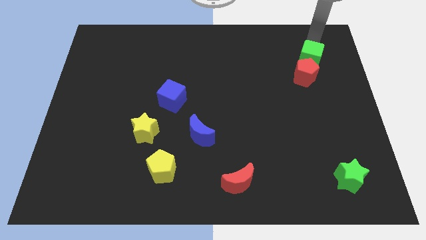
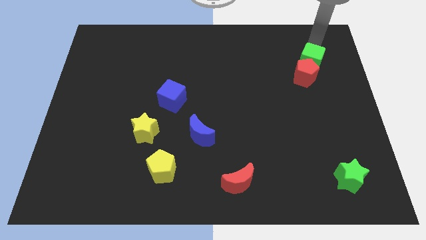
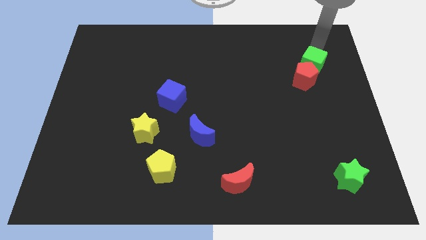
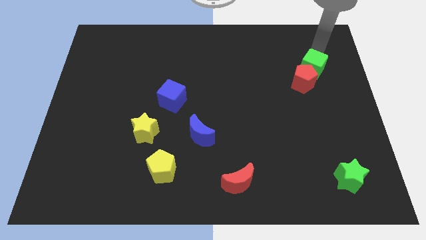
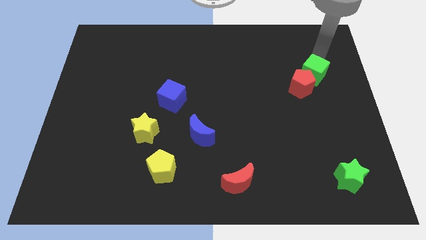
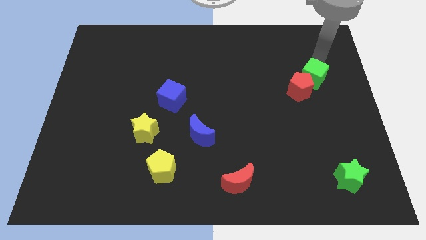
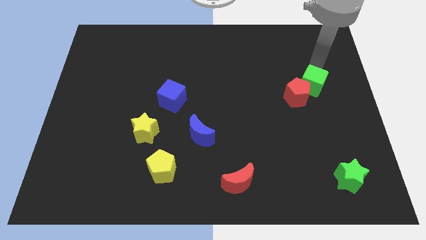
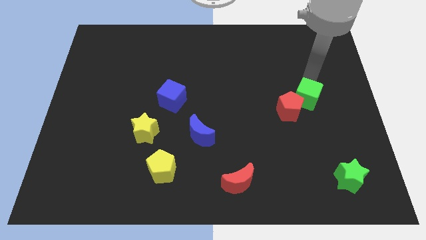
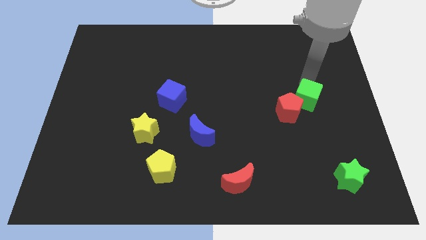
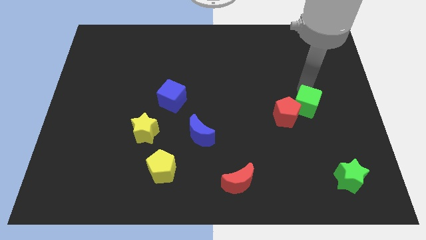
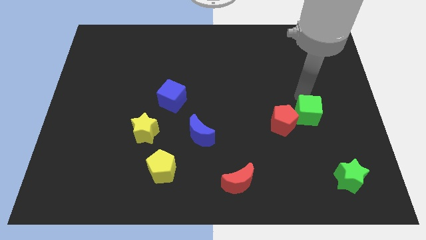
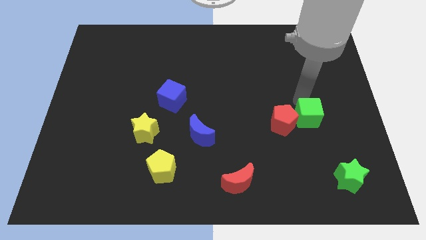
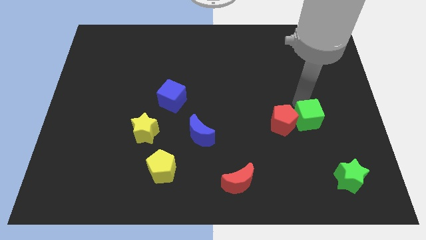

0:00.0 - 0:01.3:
move the red pentagon along with the green cube towards the bottom

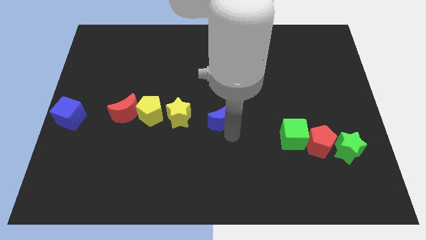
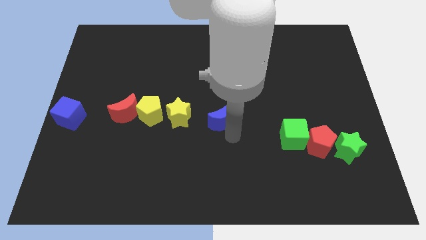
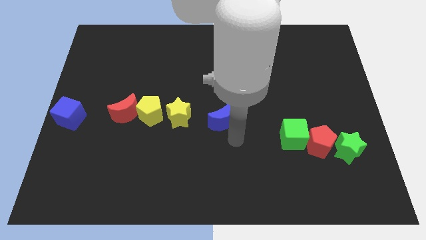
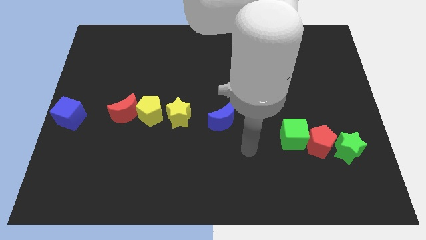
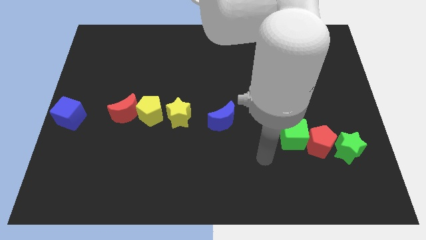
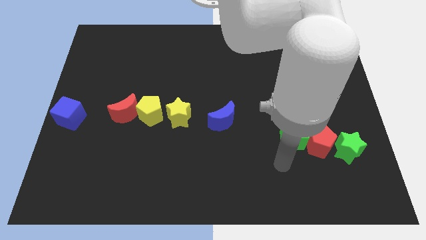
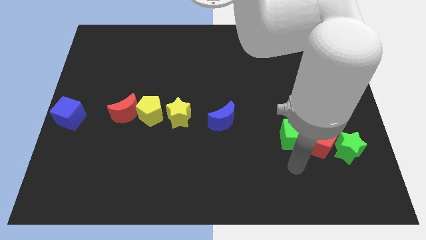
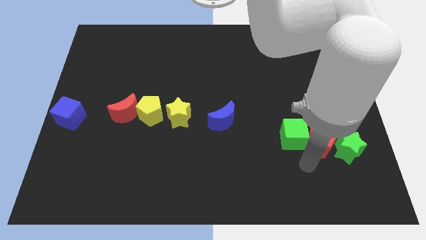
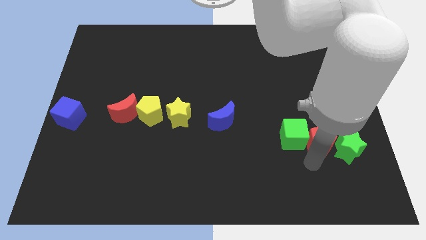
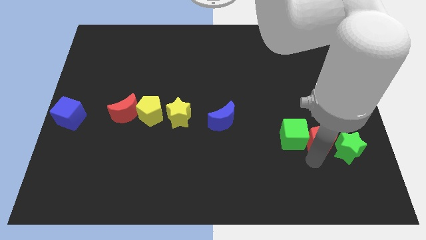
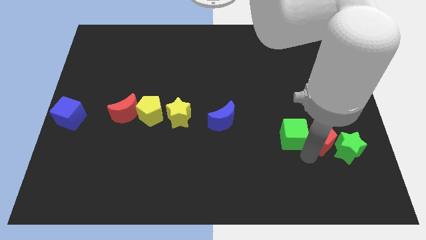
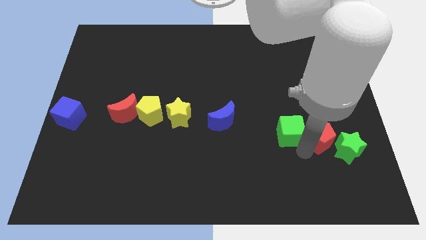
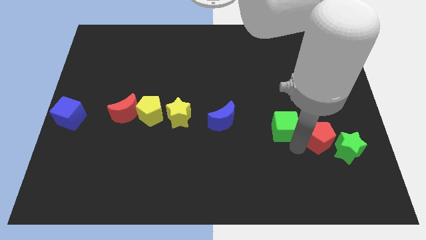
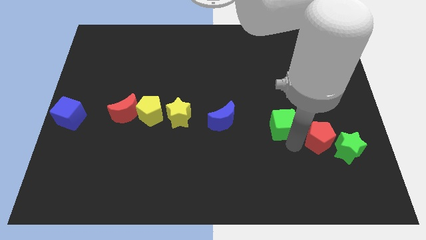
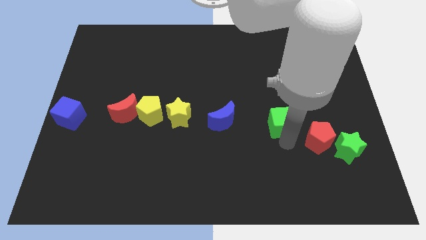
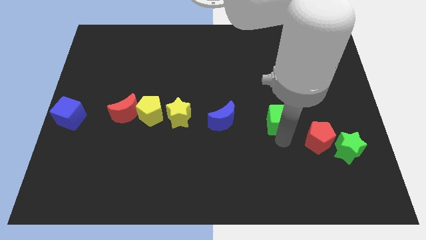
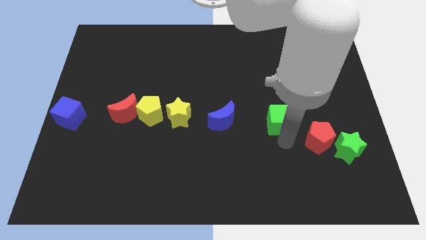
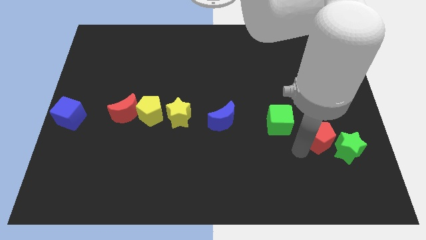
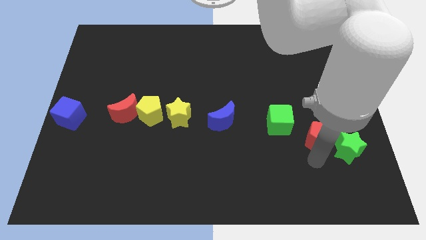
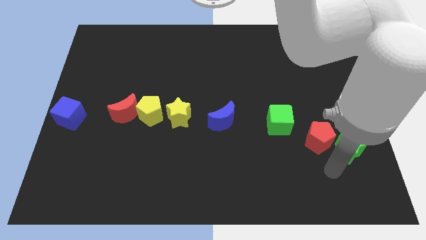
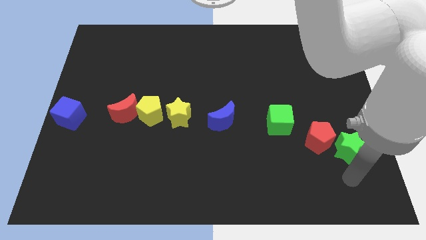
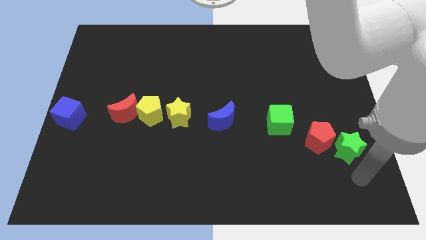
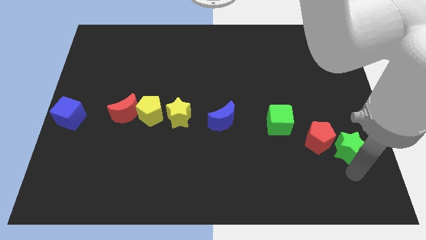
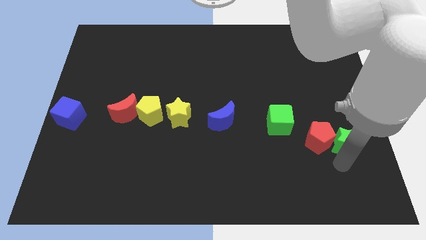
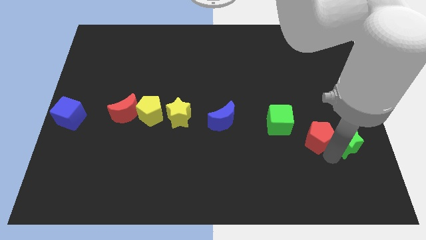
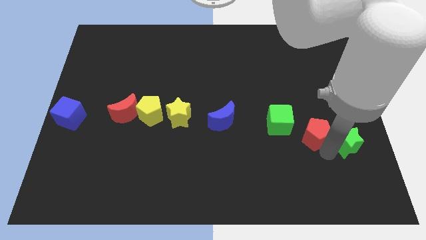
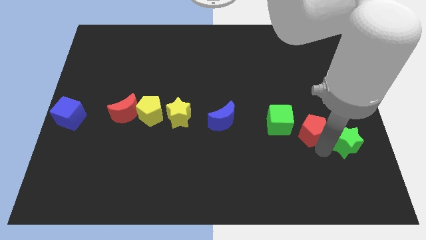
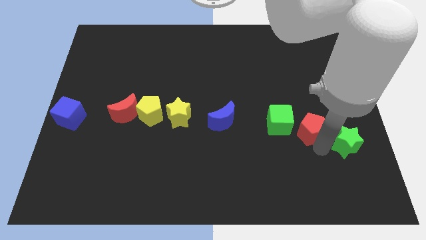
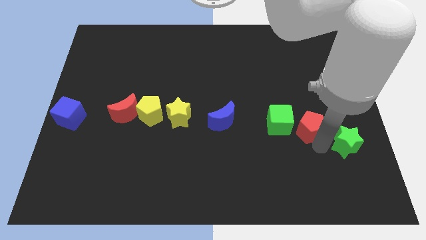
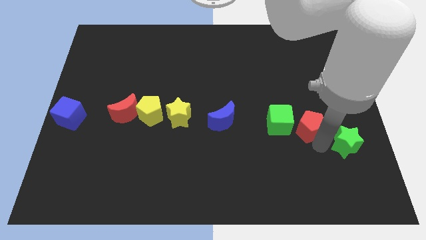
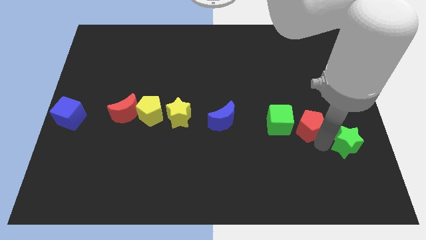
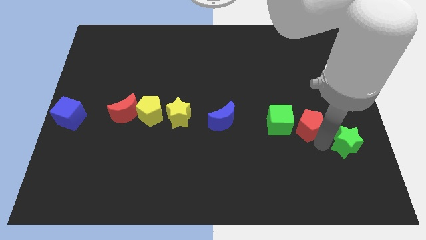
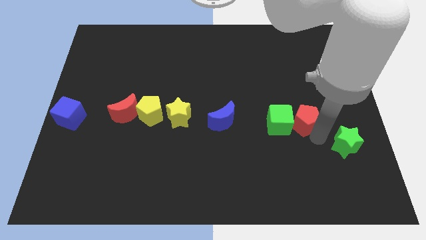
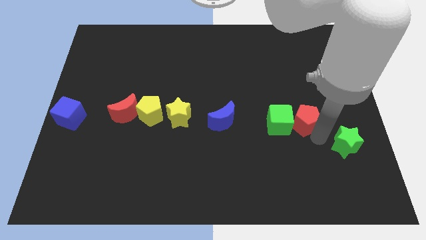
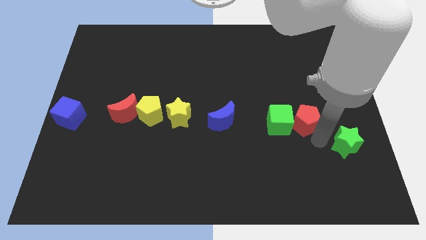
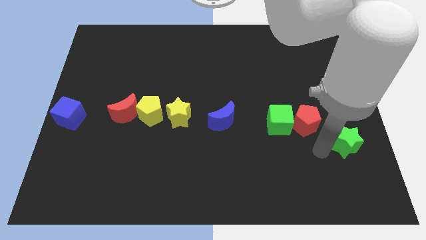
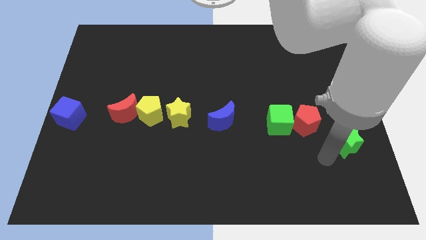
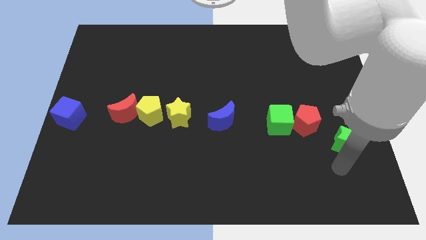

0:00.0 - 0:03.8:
move the green cube and the red pentagon up slightly

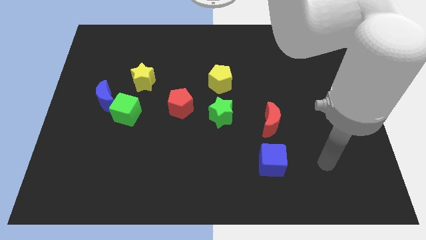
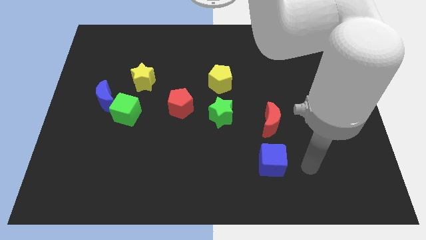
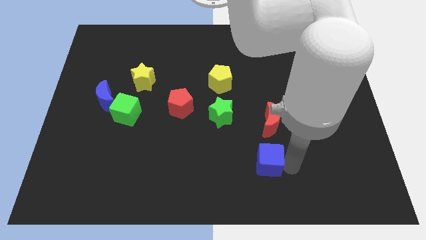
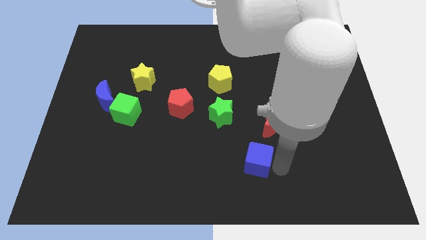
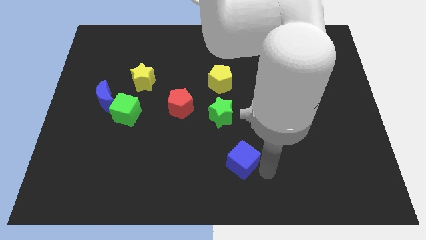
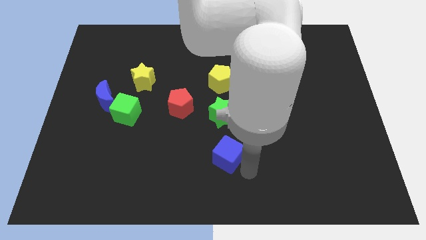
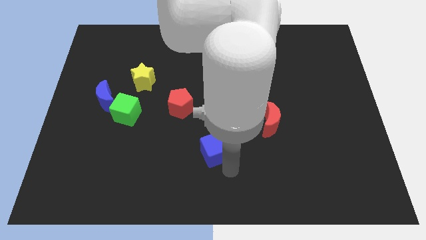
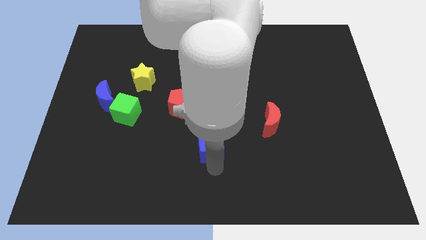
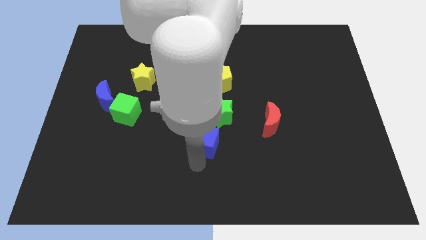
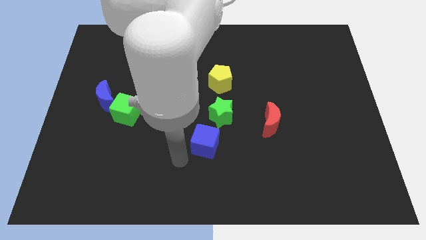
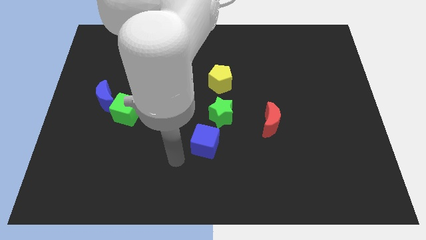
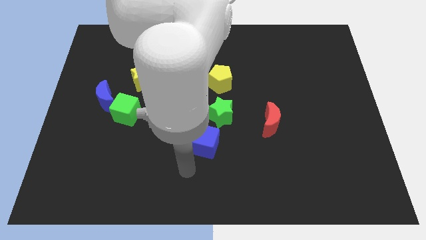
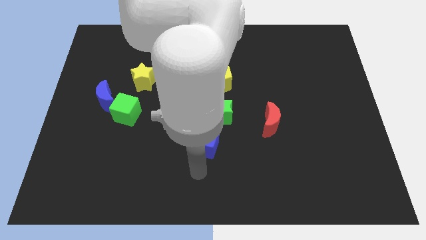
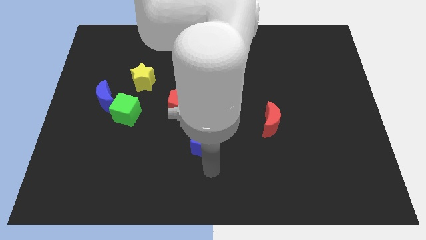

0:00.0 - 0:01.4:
move blue cube to the bottom left of green star

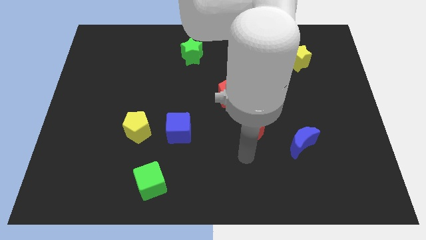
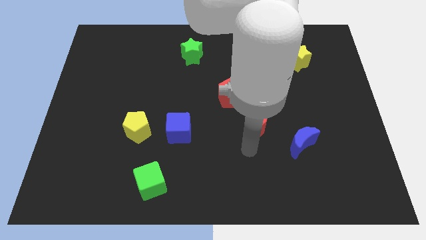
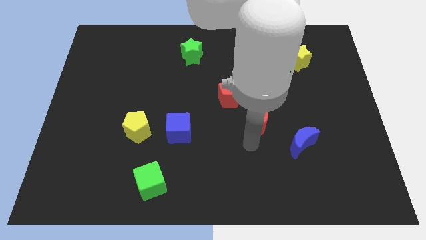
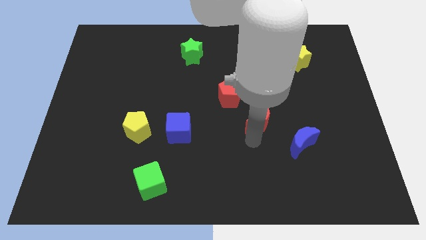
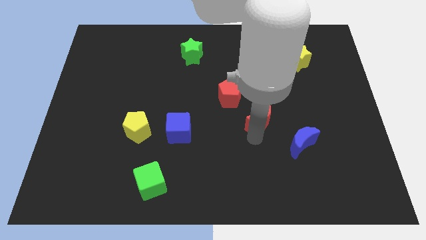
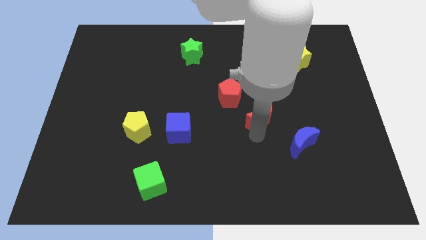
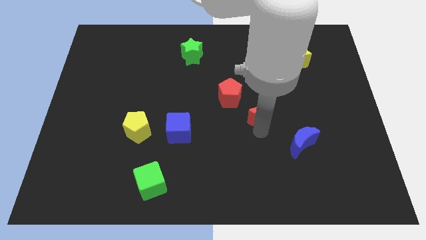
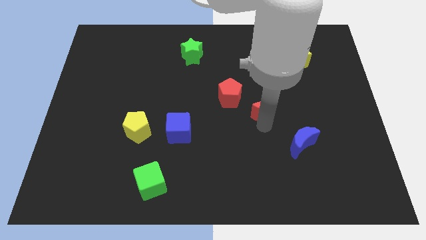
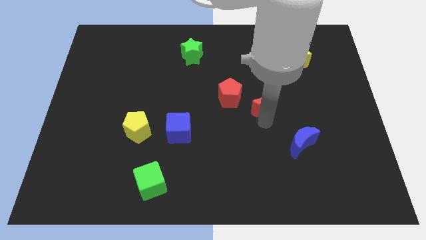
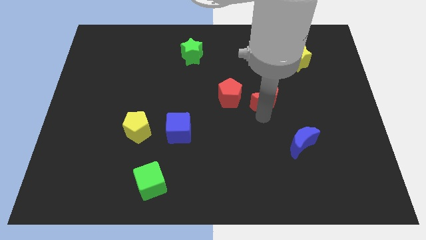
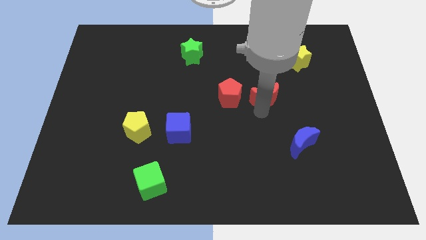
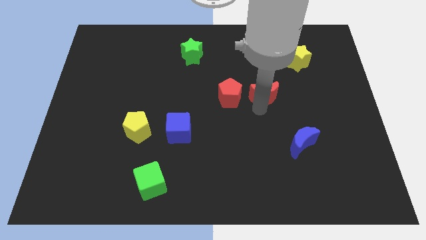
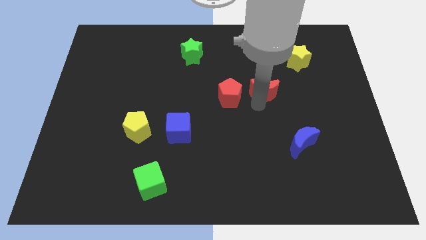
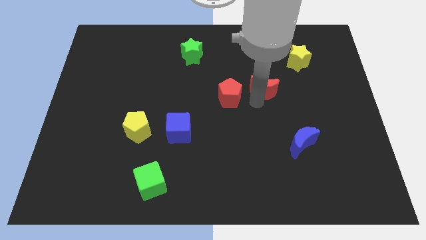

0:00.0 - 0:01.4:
move the red crescent to the right of the red pentagon

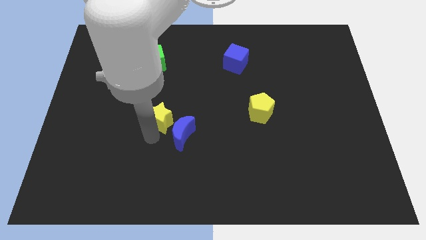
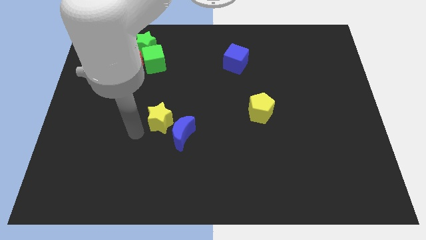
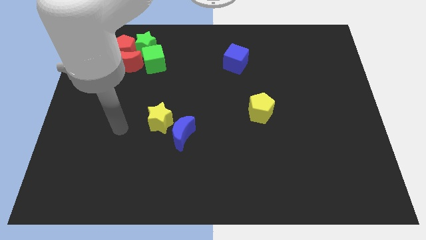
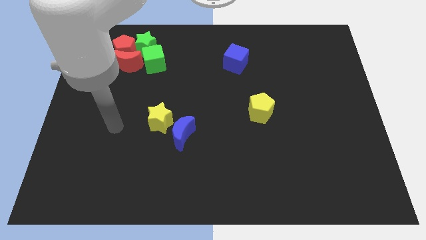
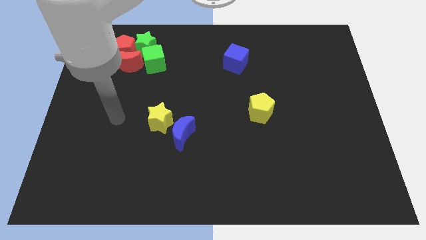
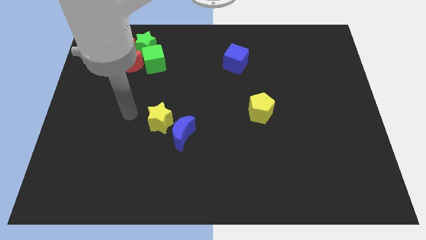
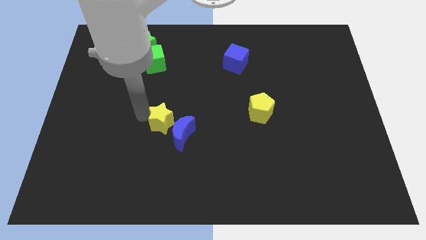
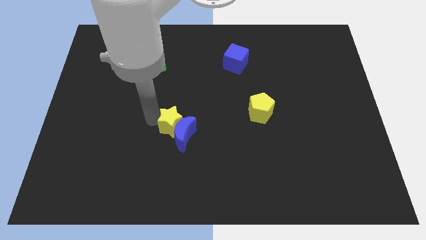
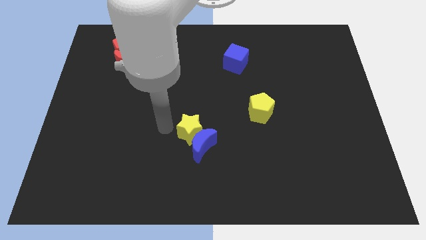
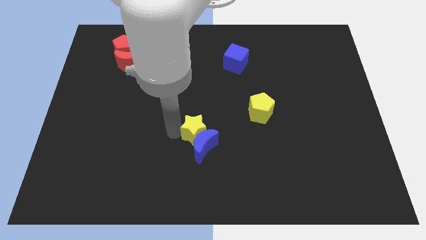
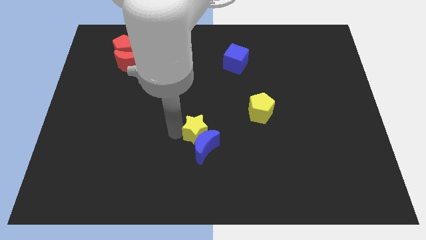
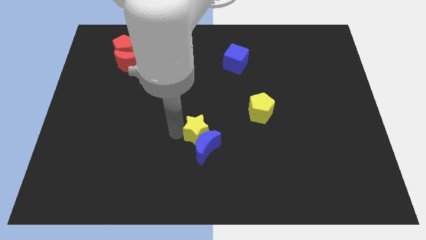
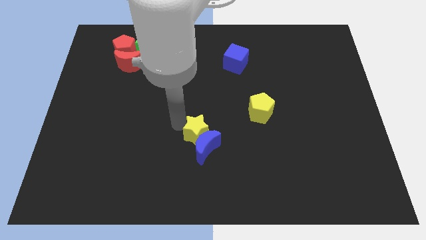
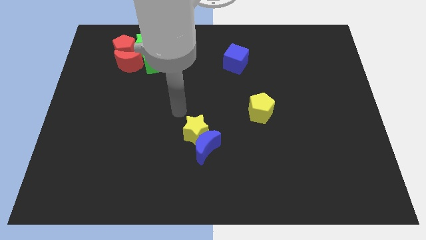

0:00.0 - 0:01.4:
push the yellow star and the blue crescent to the bottom center of the board
